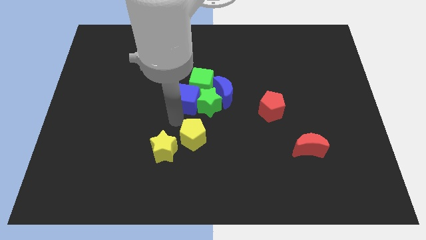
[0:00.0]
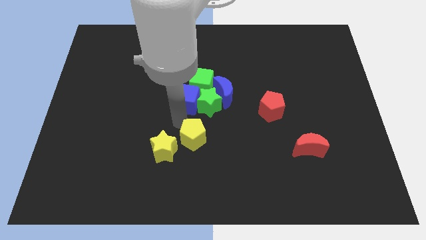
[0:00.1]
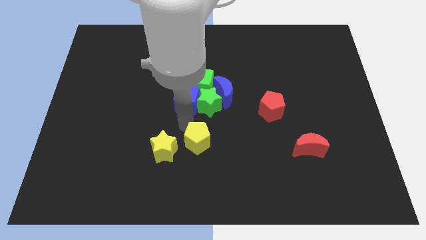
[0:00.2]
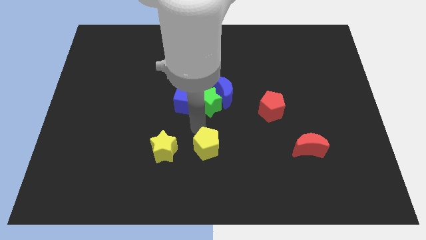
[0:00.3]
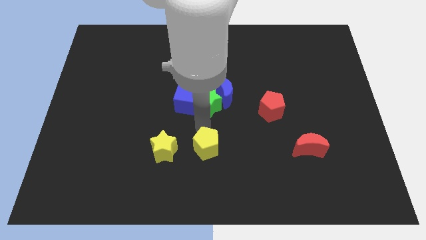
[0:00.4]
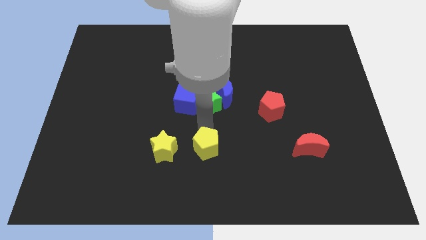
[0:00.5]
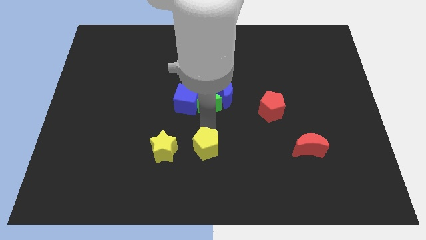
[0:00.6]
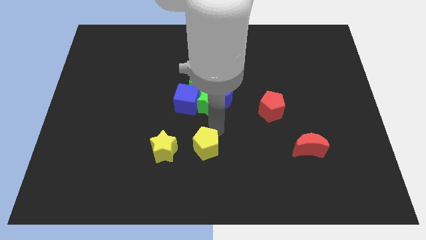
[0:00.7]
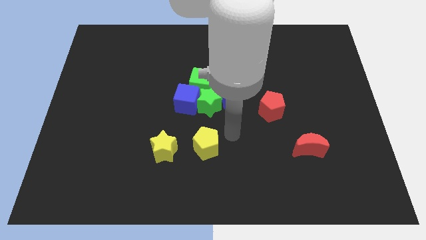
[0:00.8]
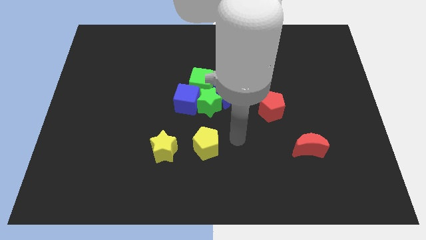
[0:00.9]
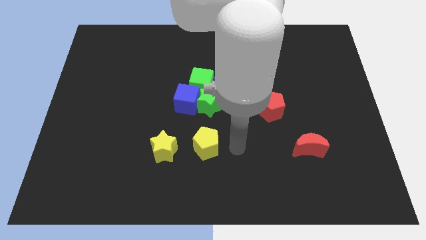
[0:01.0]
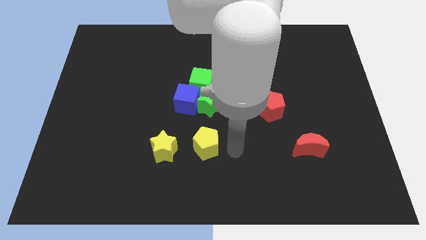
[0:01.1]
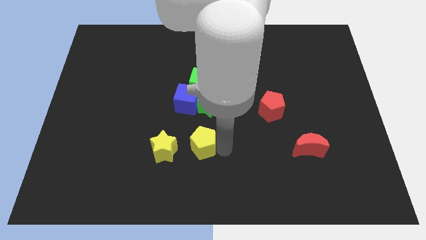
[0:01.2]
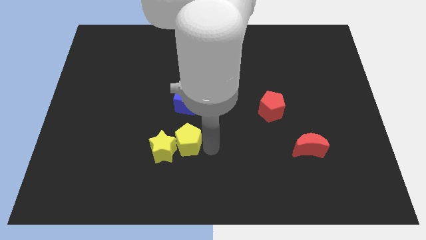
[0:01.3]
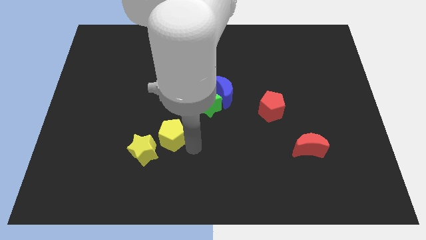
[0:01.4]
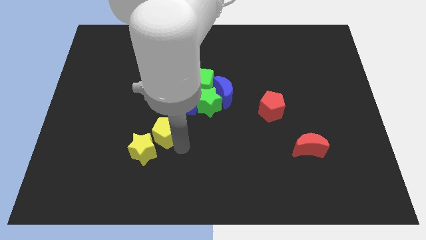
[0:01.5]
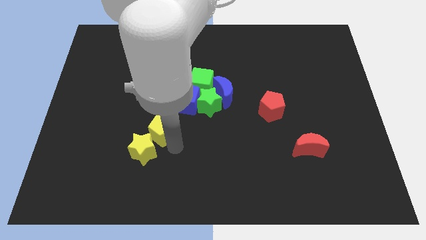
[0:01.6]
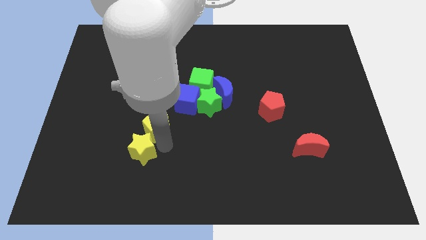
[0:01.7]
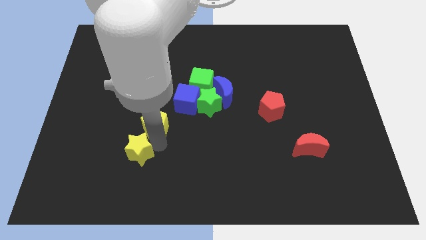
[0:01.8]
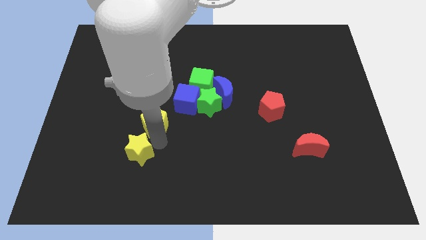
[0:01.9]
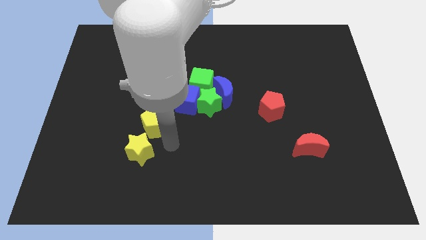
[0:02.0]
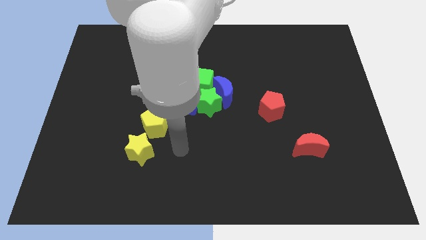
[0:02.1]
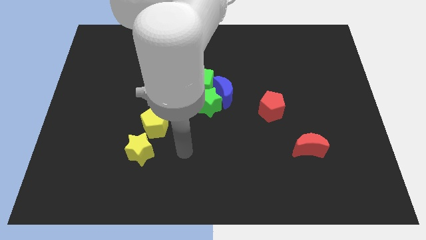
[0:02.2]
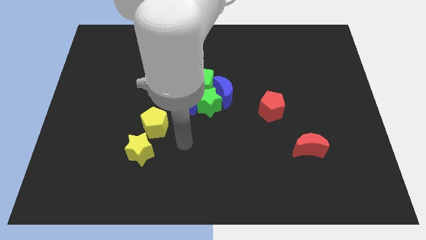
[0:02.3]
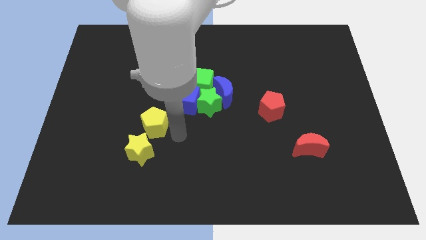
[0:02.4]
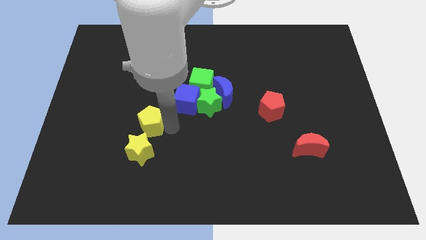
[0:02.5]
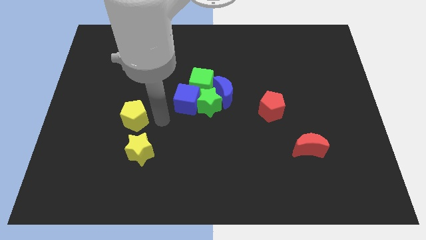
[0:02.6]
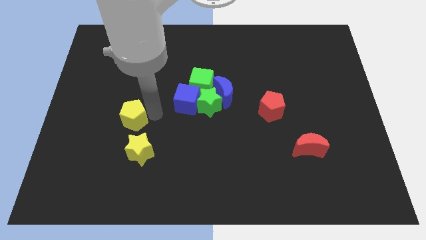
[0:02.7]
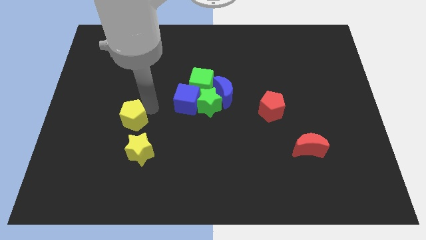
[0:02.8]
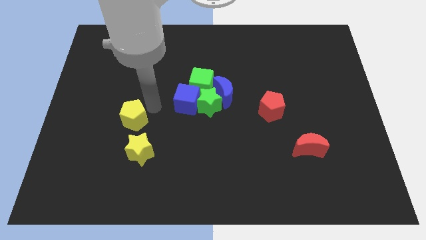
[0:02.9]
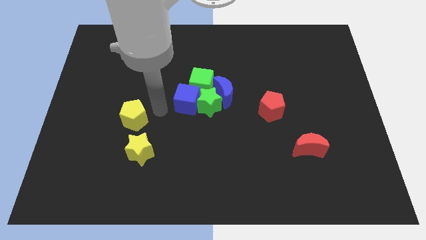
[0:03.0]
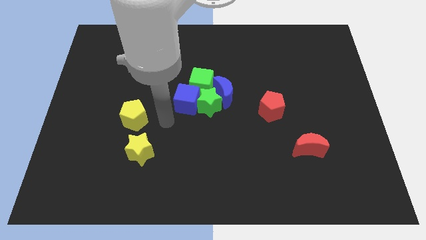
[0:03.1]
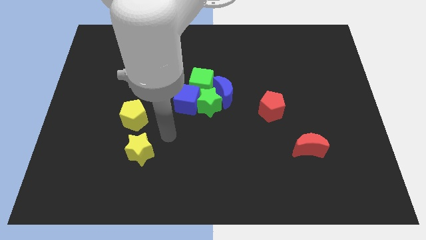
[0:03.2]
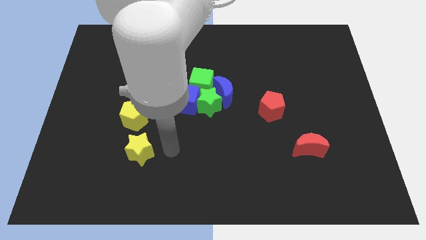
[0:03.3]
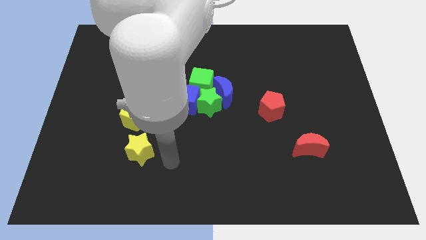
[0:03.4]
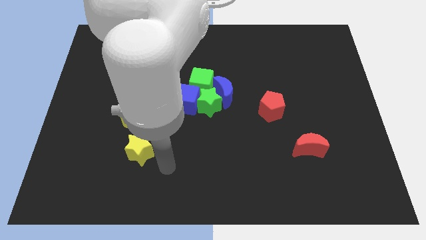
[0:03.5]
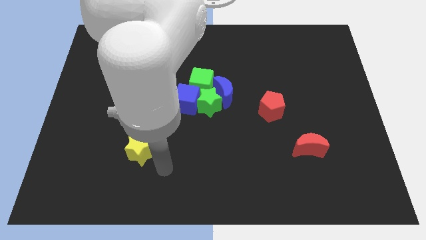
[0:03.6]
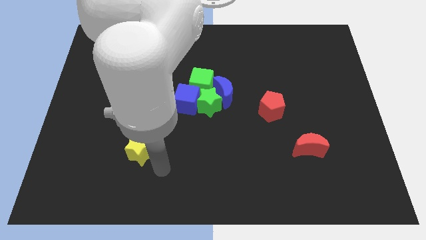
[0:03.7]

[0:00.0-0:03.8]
place yellow pentagon to the top of yellow star

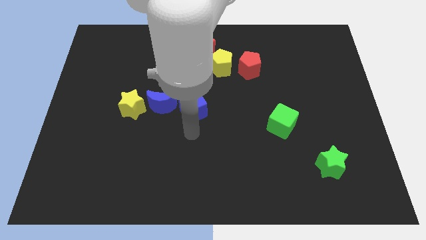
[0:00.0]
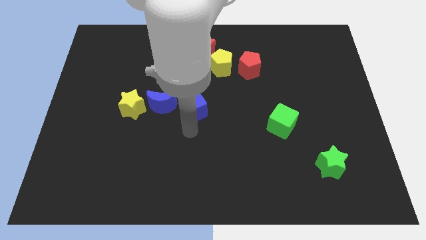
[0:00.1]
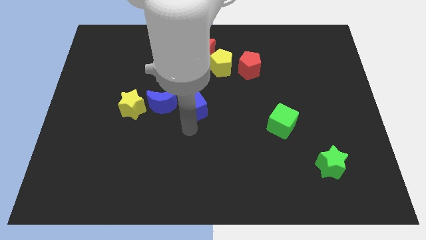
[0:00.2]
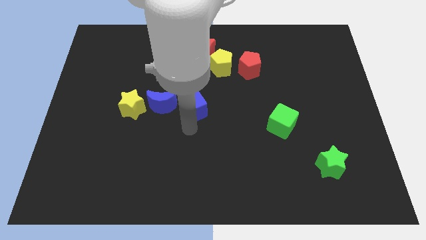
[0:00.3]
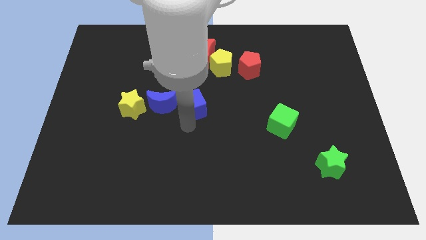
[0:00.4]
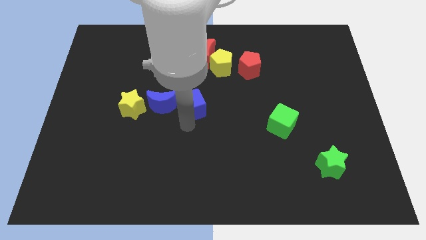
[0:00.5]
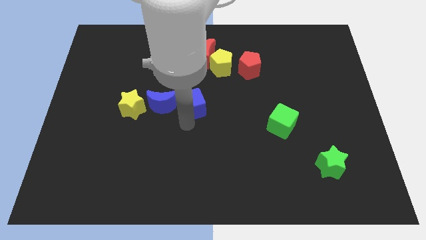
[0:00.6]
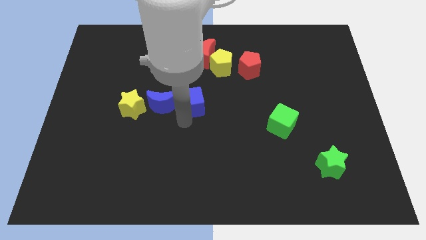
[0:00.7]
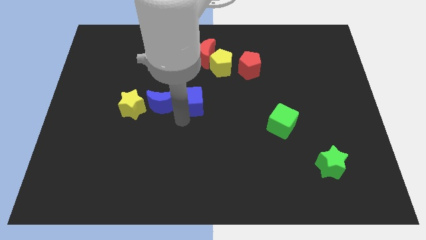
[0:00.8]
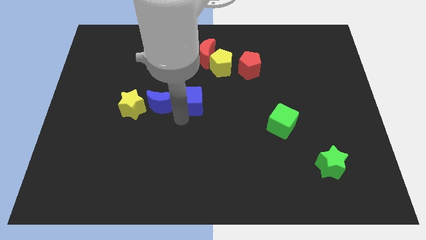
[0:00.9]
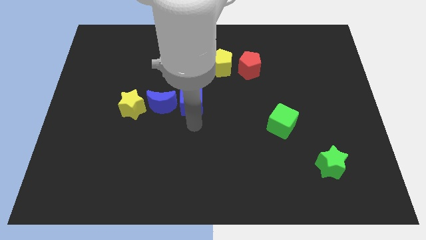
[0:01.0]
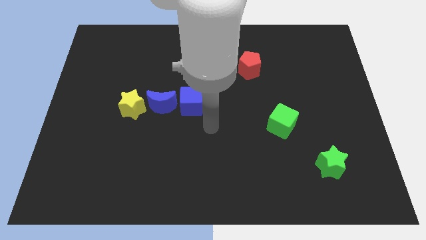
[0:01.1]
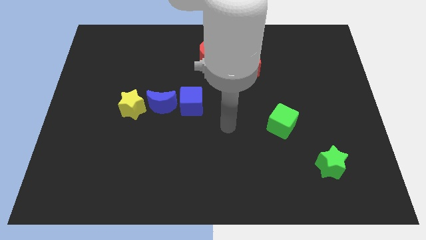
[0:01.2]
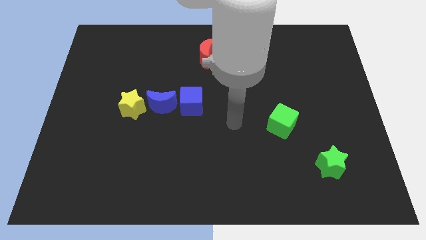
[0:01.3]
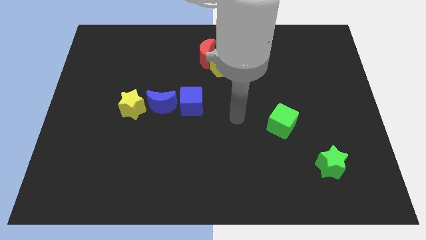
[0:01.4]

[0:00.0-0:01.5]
place the blue cube right to the blue crescent

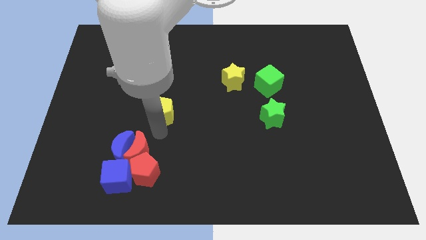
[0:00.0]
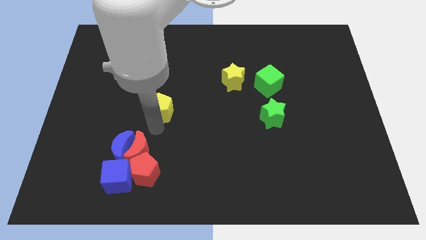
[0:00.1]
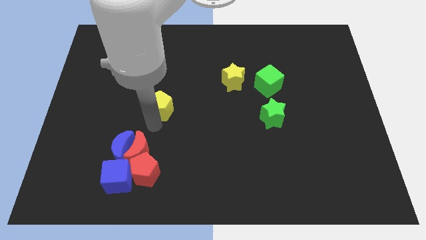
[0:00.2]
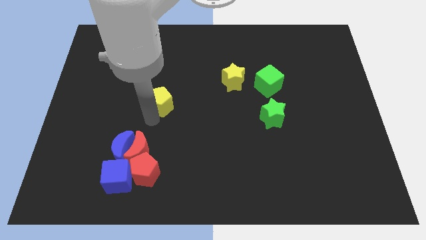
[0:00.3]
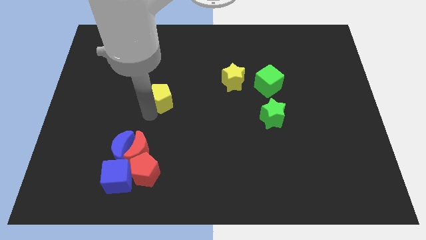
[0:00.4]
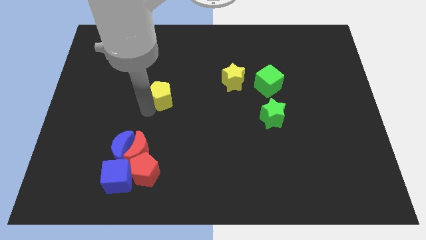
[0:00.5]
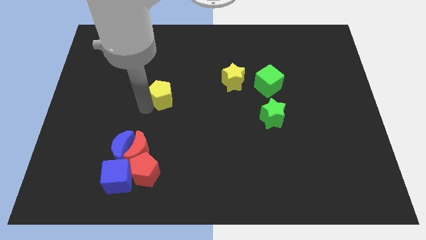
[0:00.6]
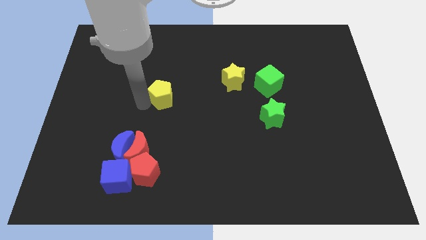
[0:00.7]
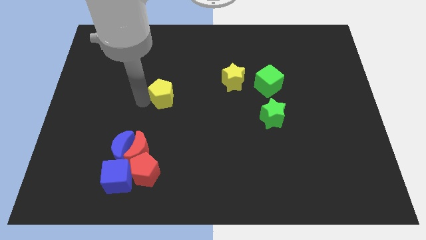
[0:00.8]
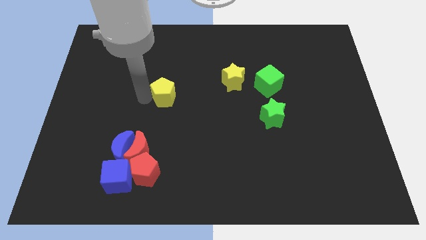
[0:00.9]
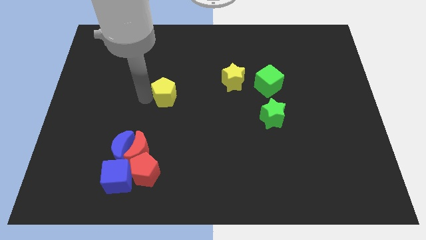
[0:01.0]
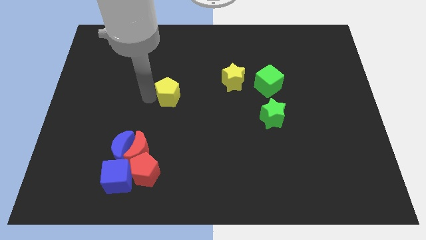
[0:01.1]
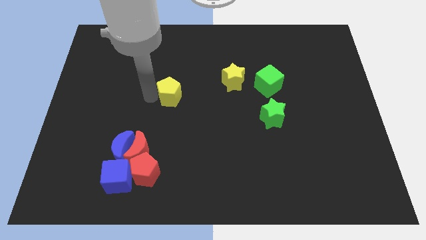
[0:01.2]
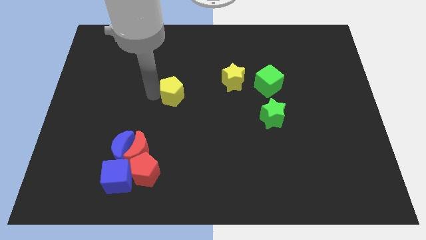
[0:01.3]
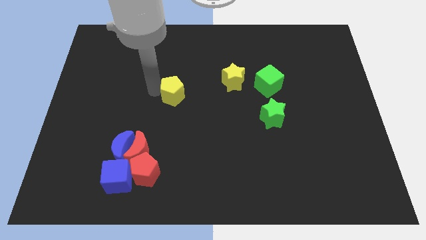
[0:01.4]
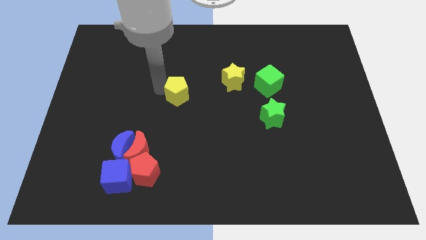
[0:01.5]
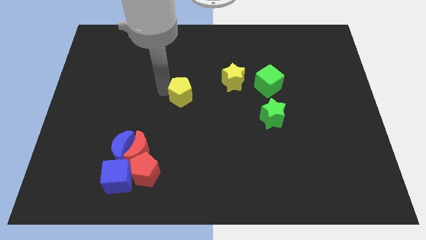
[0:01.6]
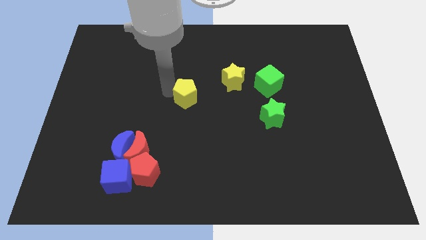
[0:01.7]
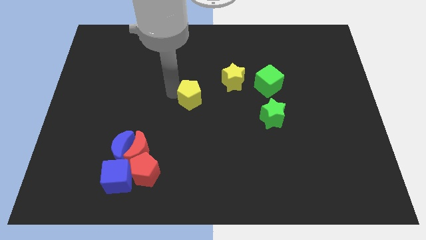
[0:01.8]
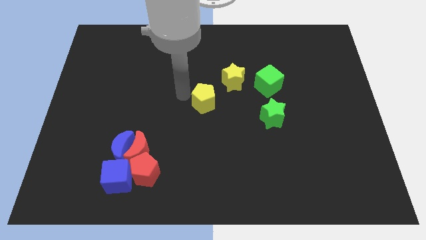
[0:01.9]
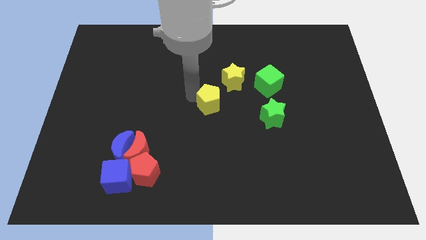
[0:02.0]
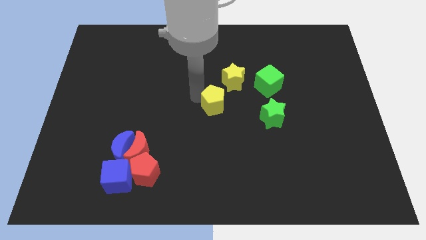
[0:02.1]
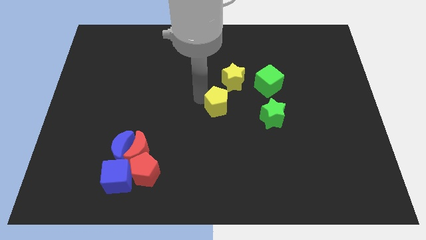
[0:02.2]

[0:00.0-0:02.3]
push the yellow pentagon close to the yellow star

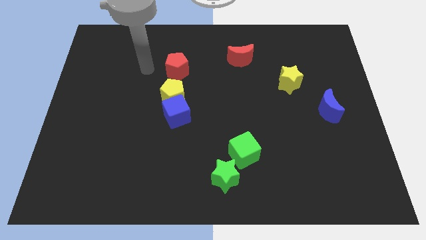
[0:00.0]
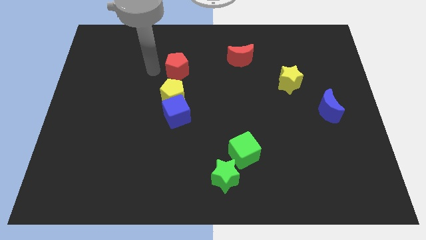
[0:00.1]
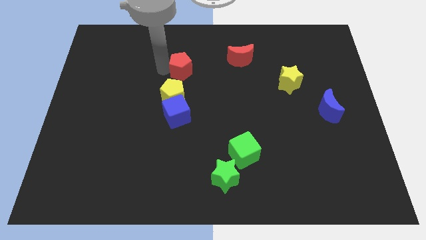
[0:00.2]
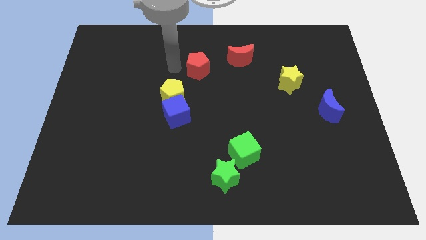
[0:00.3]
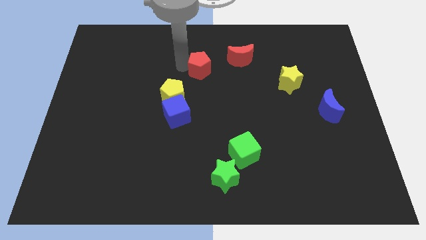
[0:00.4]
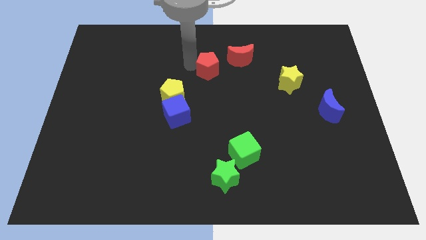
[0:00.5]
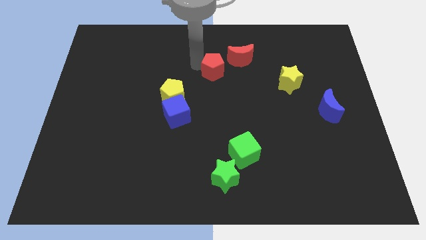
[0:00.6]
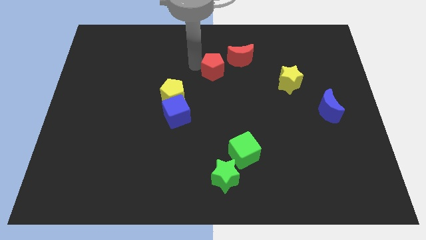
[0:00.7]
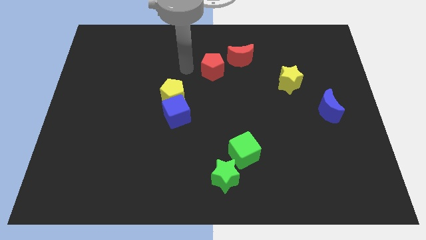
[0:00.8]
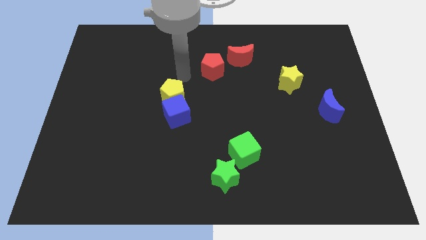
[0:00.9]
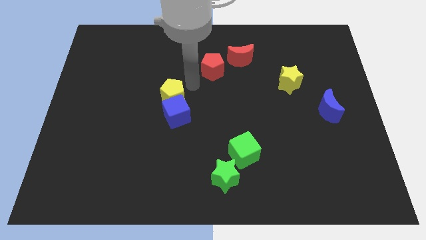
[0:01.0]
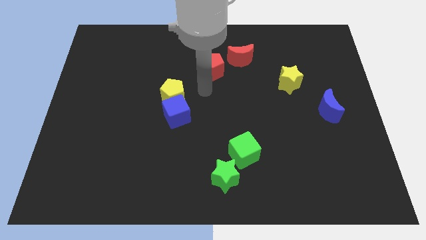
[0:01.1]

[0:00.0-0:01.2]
place red pentagon to the bottom left of red moon

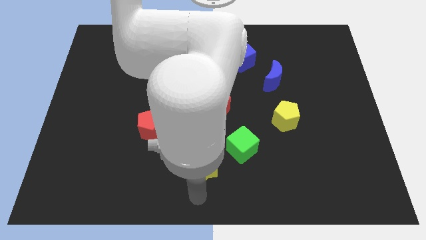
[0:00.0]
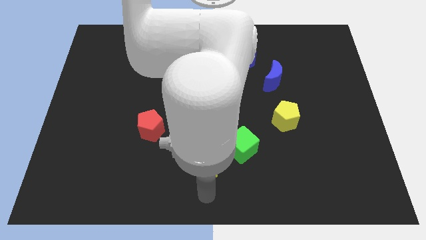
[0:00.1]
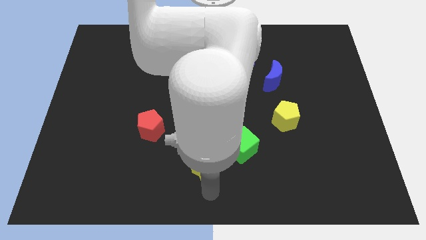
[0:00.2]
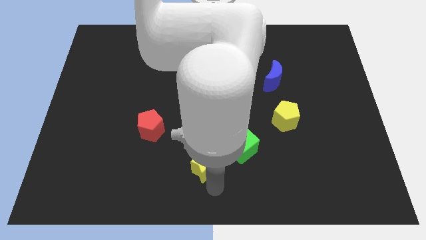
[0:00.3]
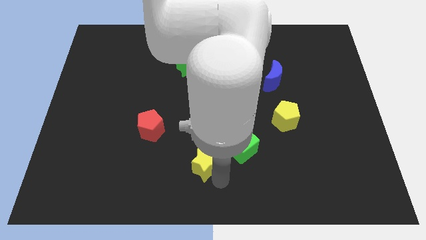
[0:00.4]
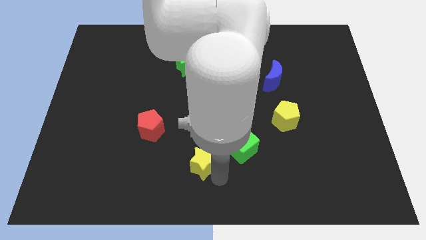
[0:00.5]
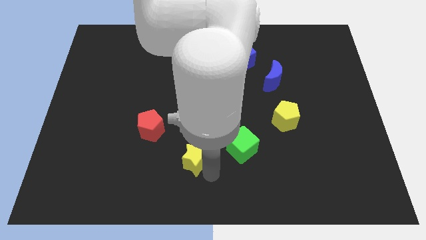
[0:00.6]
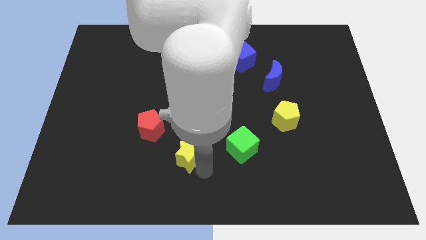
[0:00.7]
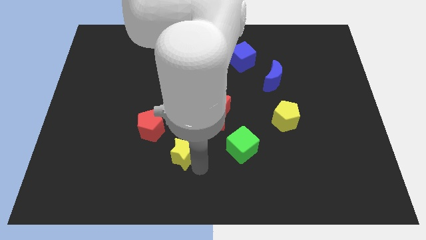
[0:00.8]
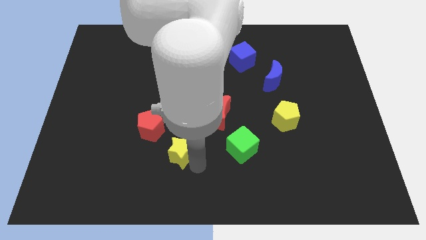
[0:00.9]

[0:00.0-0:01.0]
push the yellow star near the red pentagon
